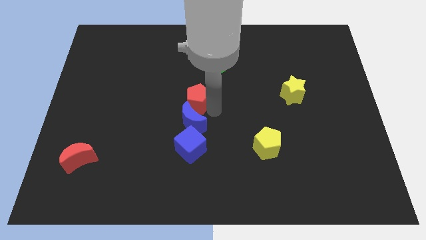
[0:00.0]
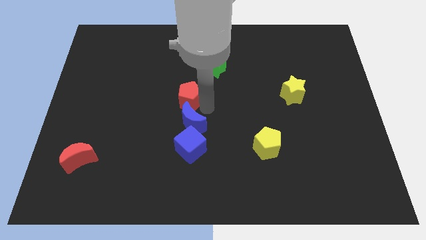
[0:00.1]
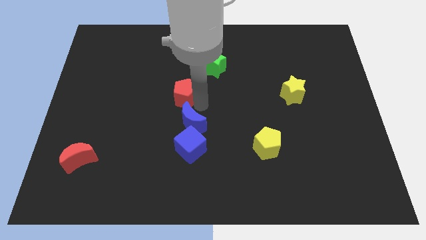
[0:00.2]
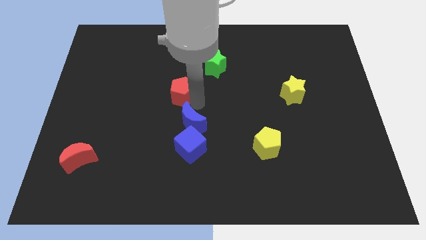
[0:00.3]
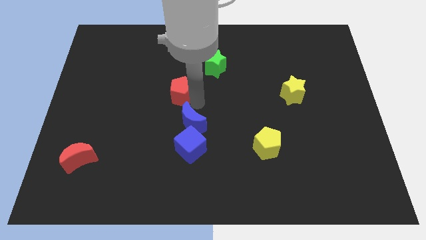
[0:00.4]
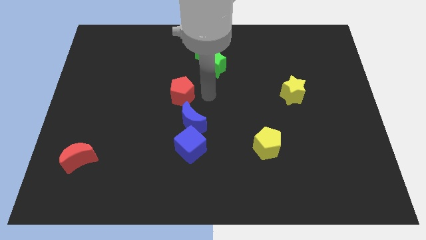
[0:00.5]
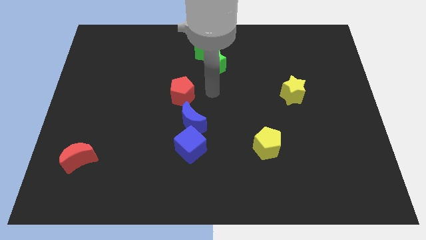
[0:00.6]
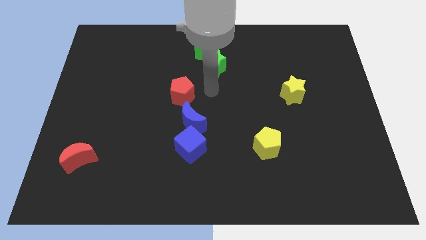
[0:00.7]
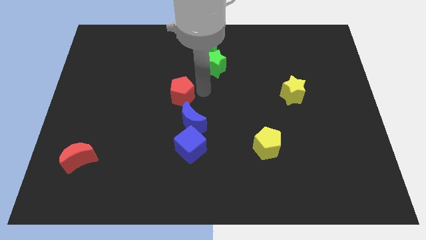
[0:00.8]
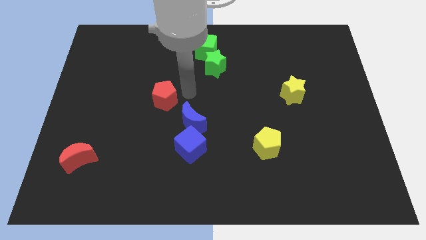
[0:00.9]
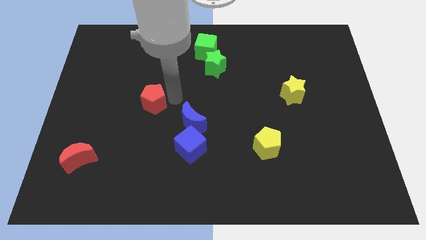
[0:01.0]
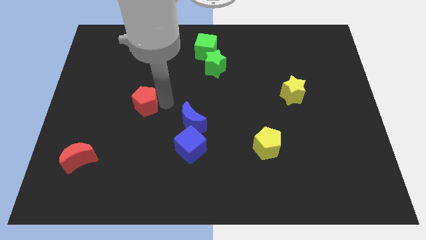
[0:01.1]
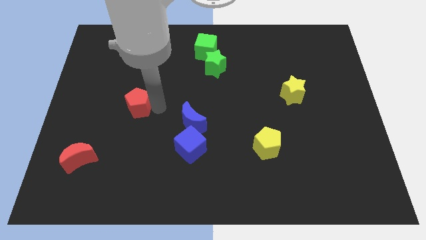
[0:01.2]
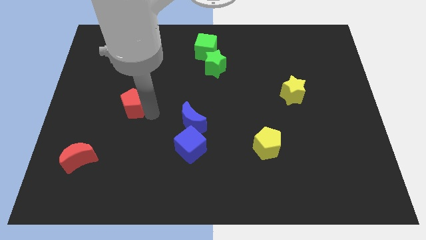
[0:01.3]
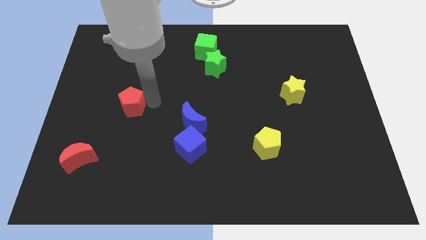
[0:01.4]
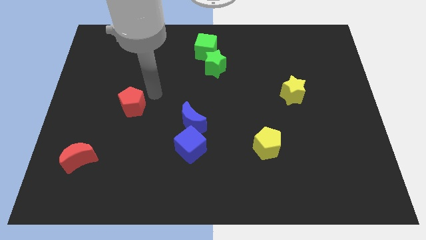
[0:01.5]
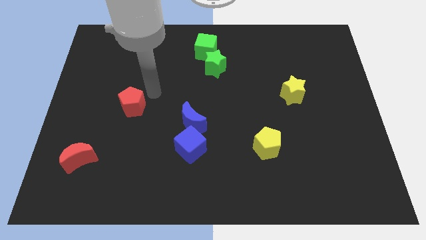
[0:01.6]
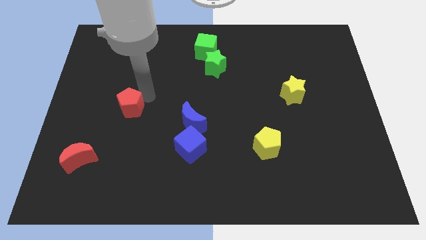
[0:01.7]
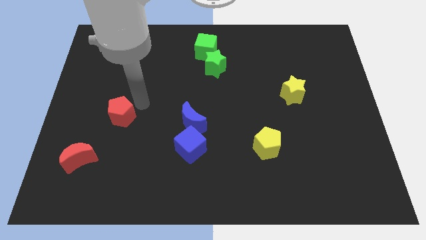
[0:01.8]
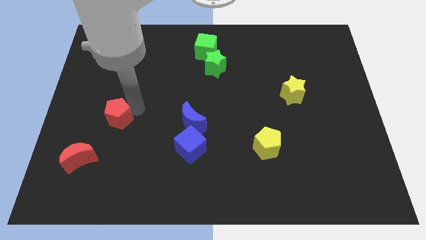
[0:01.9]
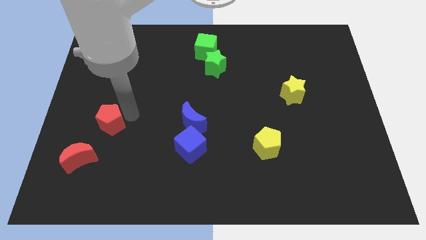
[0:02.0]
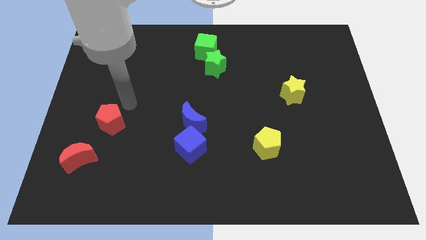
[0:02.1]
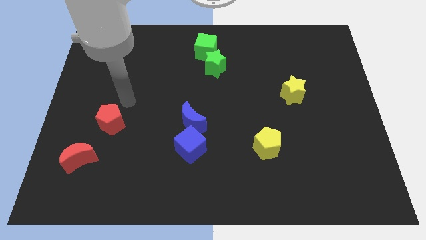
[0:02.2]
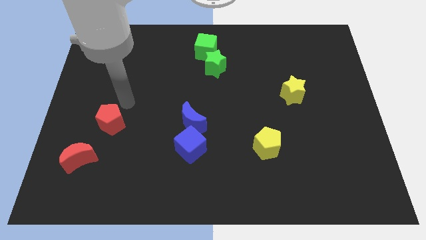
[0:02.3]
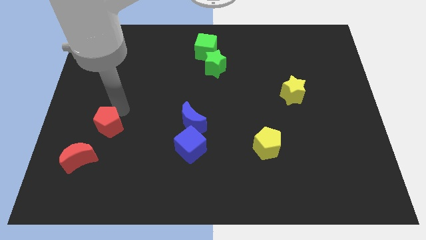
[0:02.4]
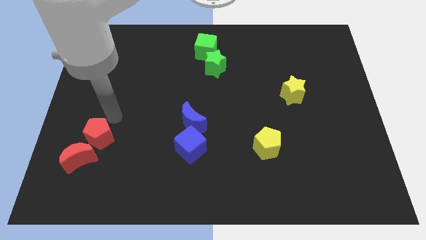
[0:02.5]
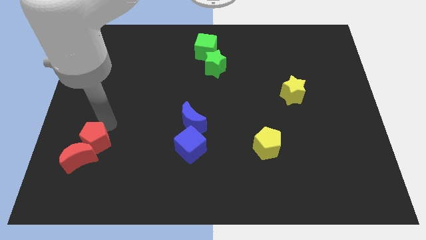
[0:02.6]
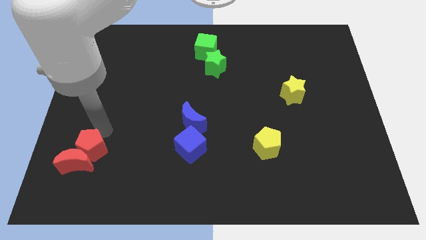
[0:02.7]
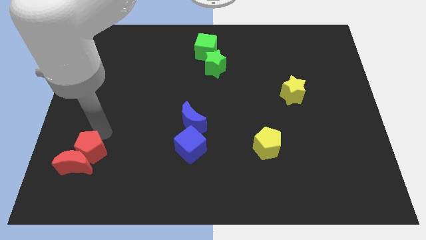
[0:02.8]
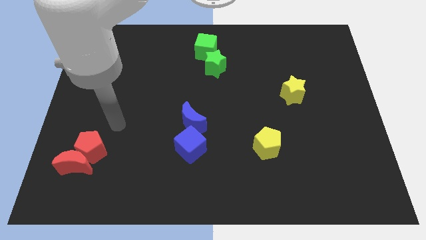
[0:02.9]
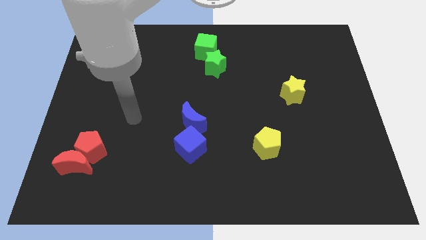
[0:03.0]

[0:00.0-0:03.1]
push the red pentagon into the top side of the red crescent

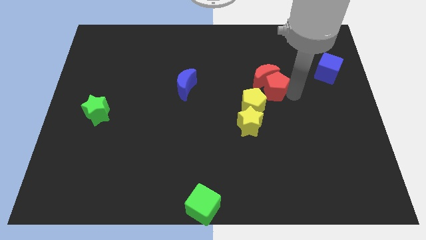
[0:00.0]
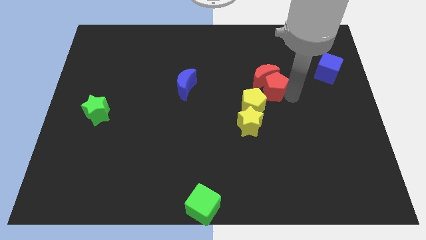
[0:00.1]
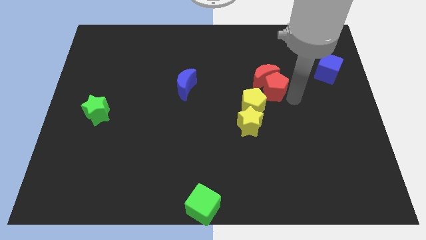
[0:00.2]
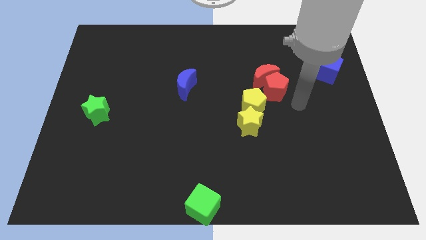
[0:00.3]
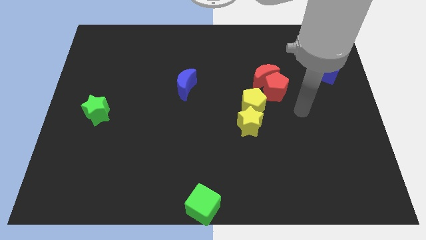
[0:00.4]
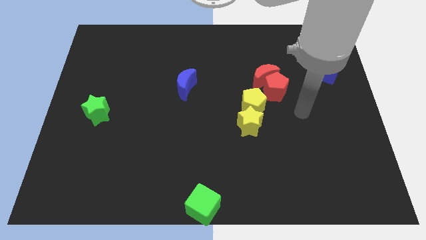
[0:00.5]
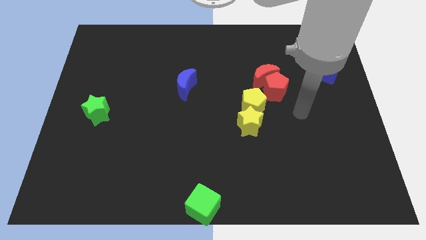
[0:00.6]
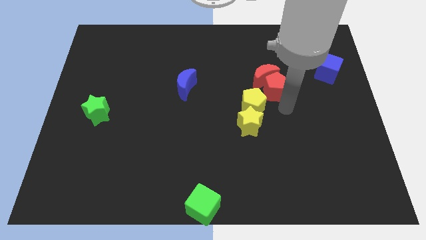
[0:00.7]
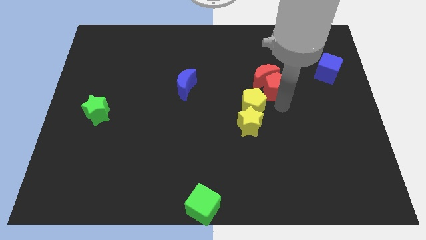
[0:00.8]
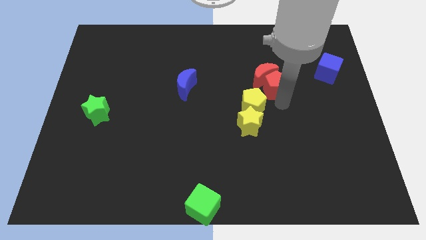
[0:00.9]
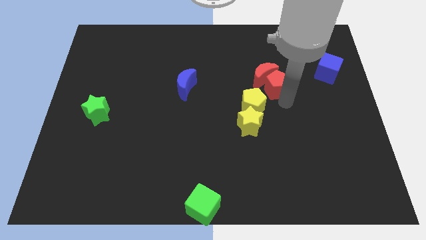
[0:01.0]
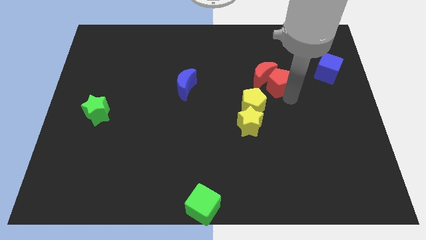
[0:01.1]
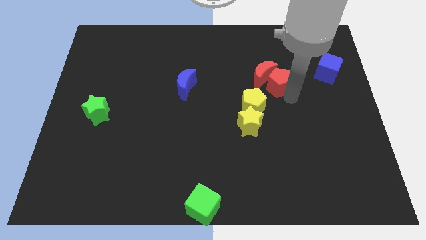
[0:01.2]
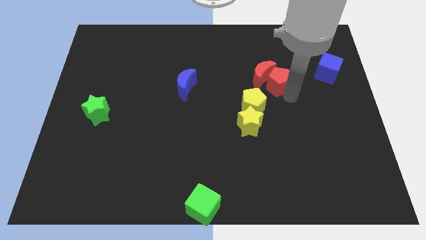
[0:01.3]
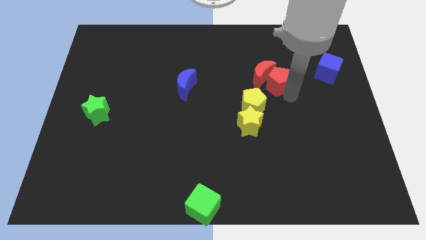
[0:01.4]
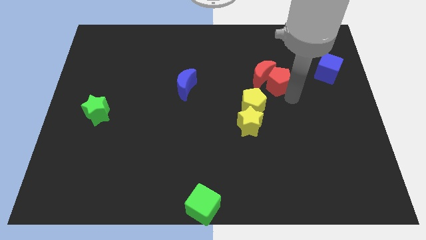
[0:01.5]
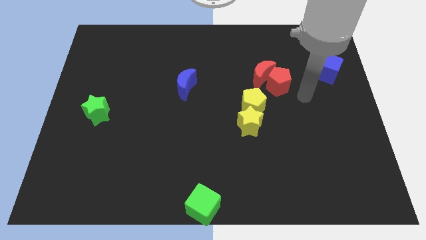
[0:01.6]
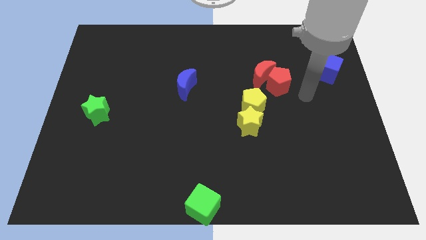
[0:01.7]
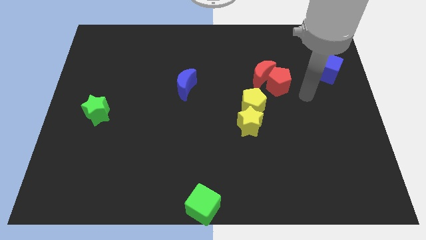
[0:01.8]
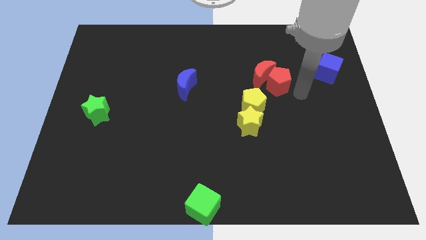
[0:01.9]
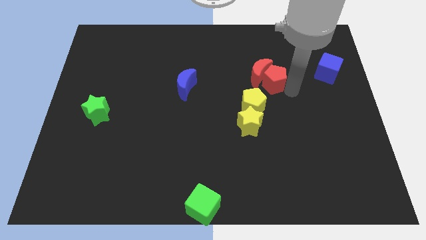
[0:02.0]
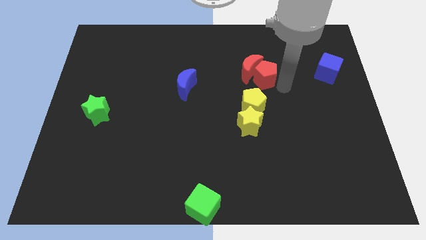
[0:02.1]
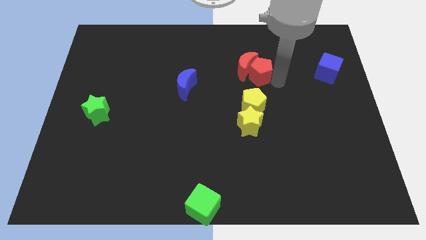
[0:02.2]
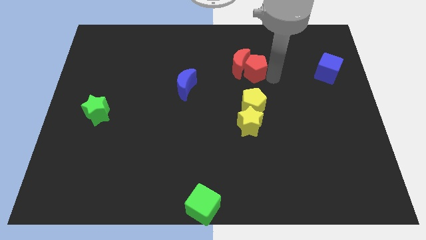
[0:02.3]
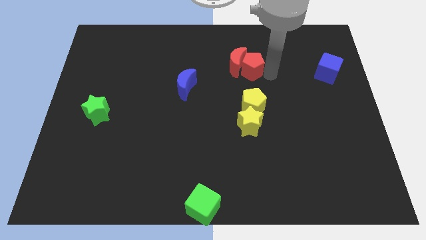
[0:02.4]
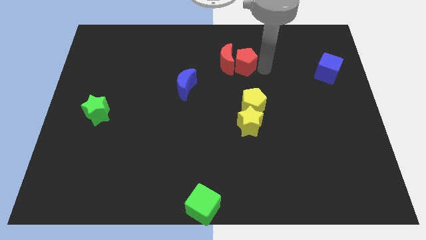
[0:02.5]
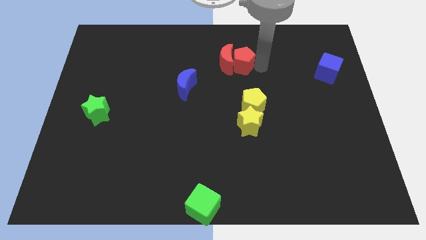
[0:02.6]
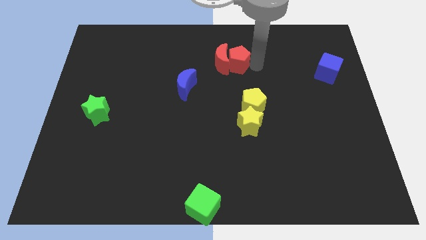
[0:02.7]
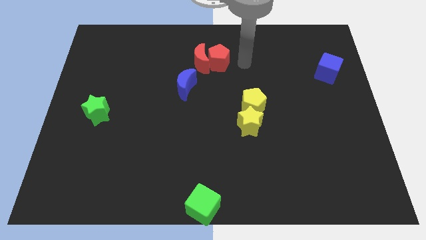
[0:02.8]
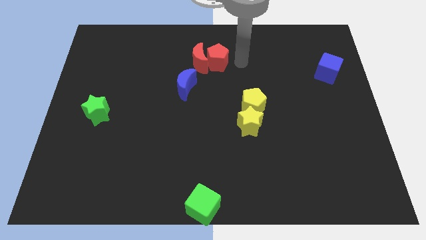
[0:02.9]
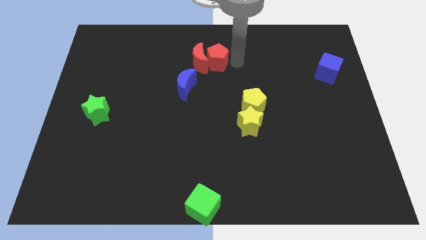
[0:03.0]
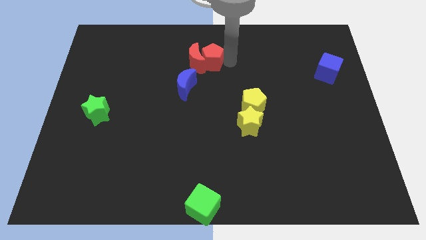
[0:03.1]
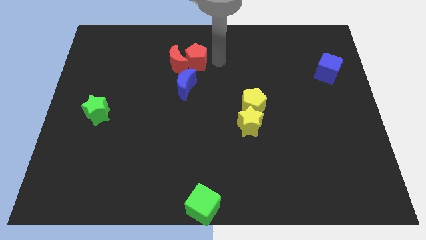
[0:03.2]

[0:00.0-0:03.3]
place the red blocks above the blue crescent

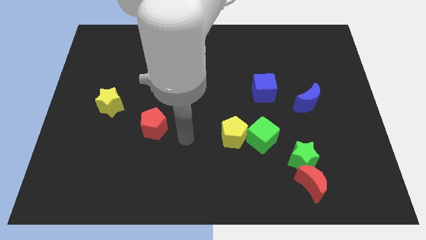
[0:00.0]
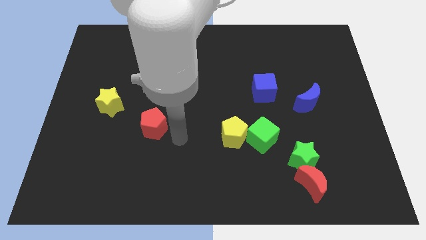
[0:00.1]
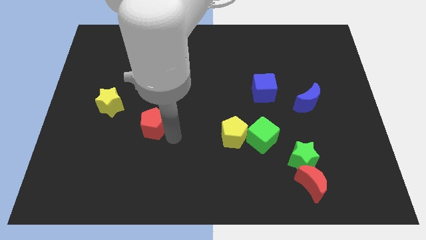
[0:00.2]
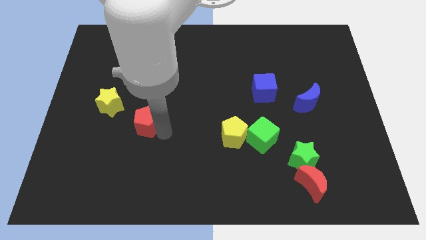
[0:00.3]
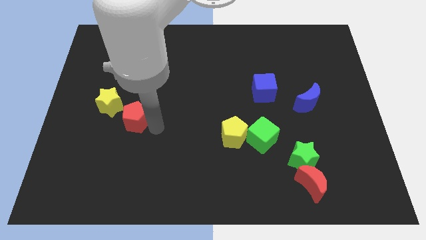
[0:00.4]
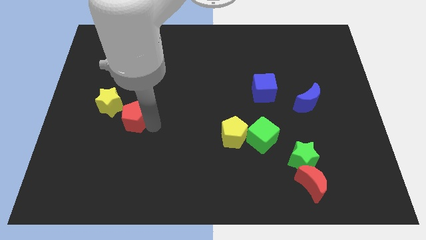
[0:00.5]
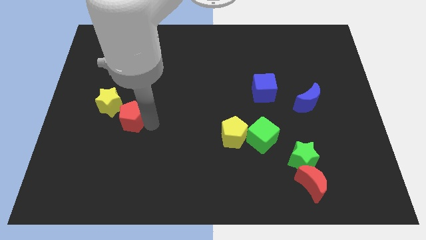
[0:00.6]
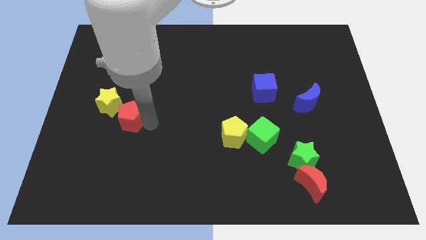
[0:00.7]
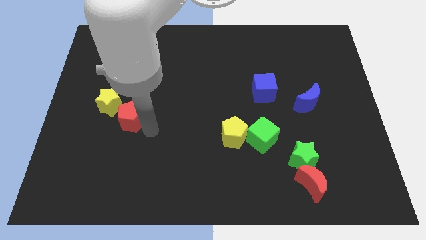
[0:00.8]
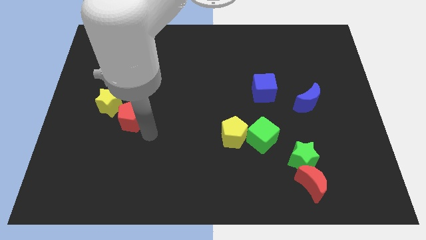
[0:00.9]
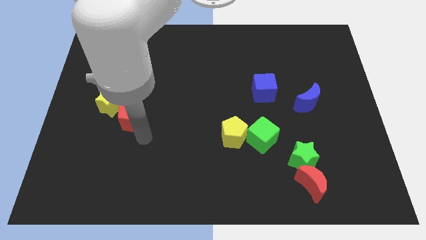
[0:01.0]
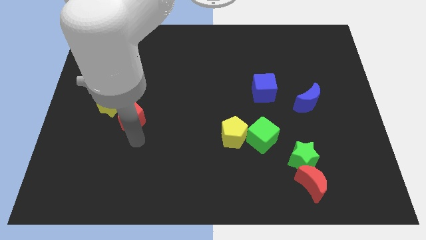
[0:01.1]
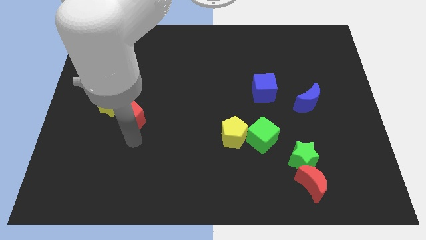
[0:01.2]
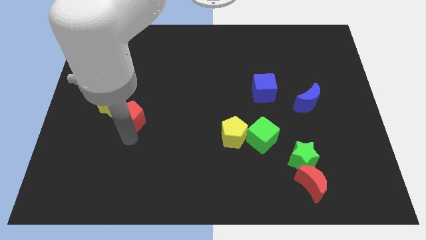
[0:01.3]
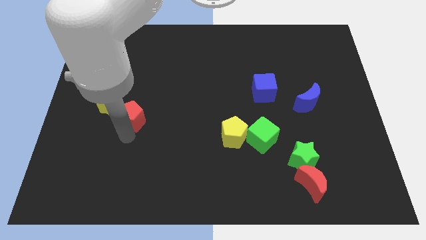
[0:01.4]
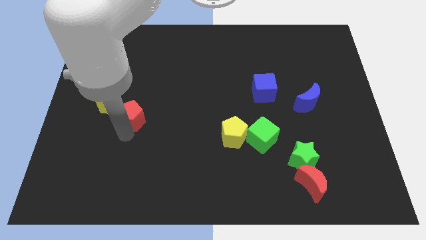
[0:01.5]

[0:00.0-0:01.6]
push the red pentagon right to yellow star

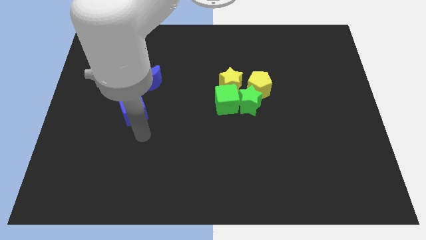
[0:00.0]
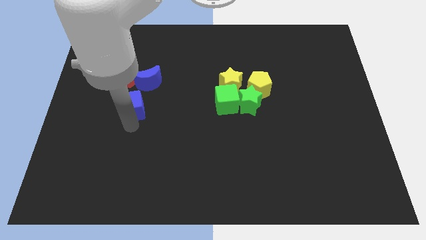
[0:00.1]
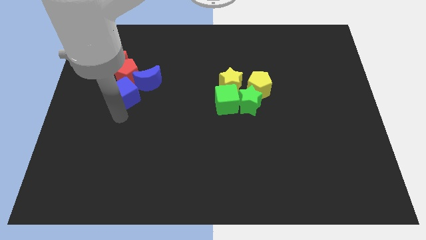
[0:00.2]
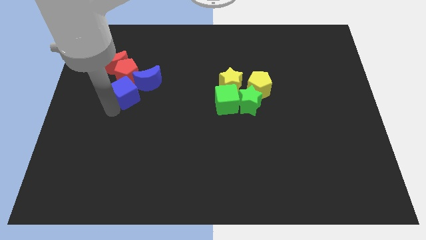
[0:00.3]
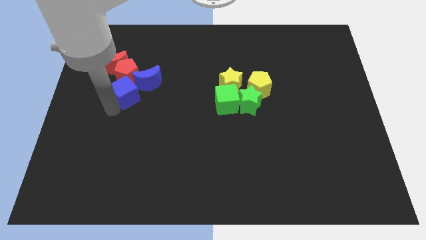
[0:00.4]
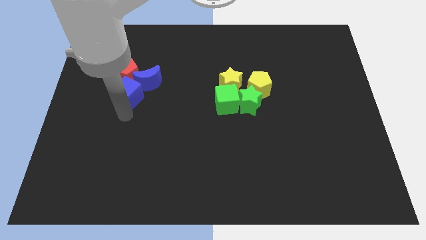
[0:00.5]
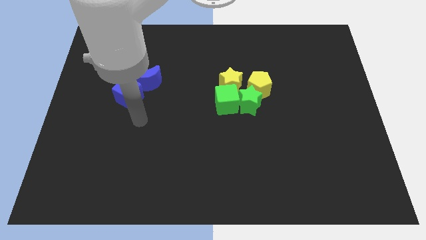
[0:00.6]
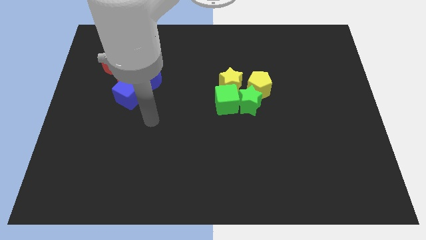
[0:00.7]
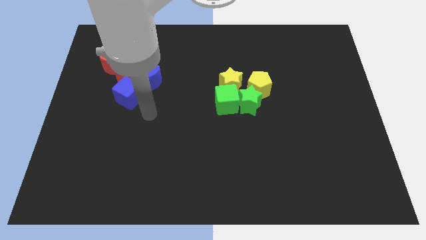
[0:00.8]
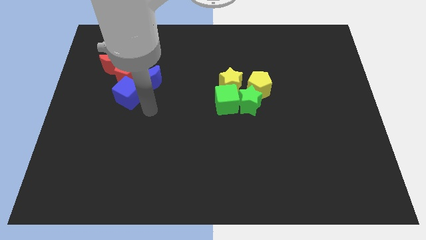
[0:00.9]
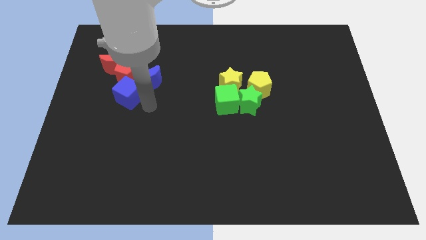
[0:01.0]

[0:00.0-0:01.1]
push blue cube into red pentagon
